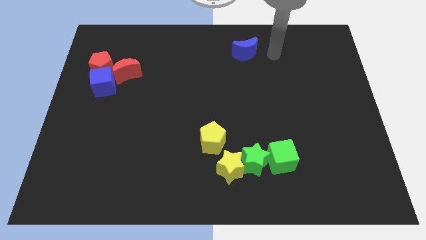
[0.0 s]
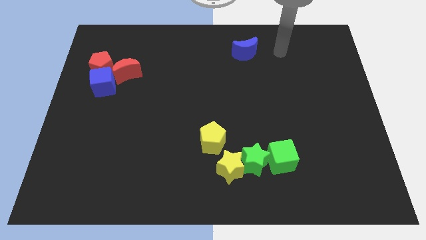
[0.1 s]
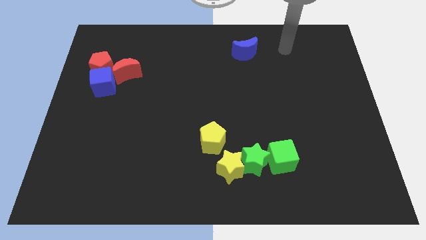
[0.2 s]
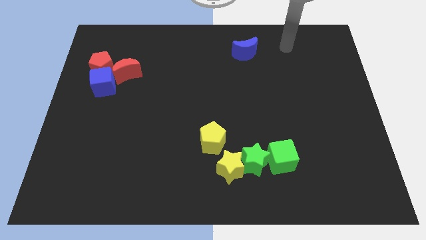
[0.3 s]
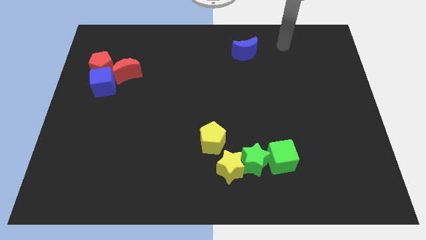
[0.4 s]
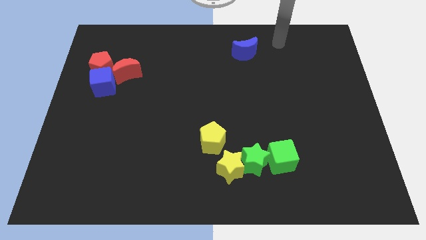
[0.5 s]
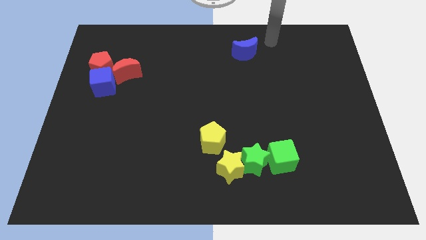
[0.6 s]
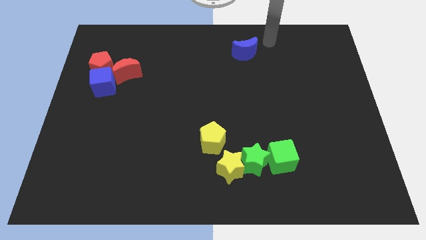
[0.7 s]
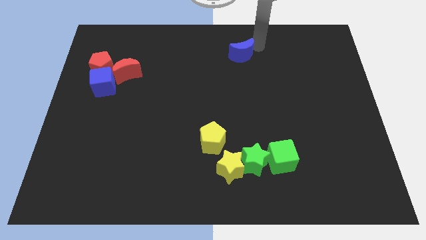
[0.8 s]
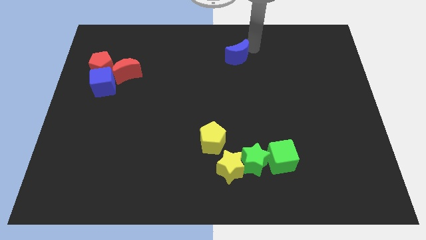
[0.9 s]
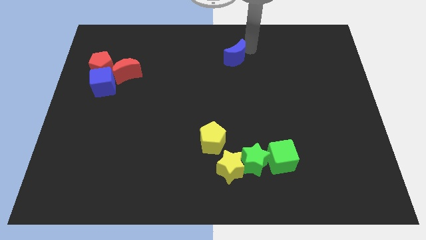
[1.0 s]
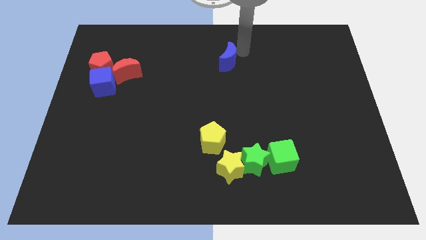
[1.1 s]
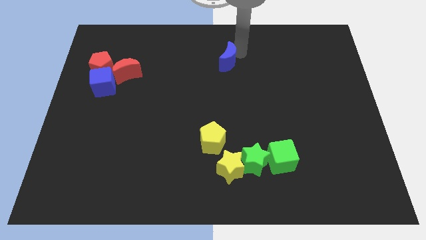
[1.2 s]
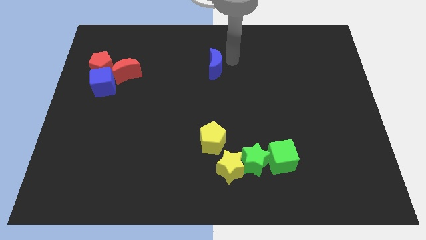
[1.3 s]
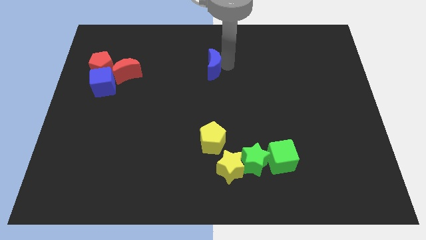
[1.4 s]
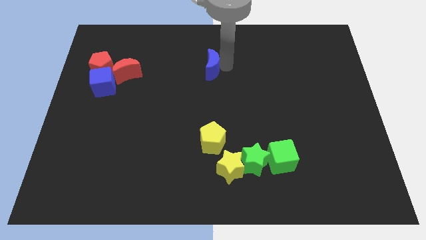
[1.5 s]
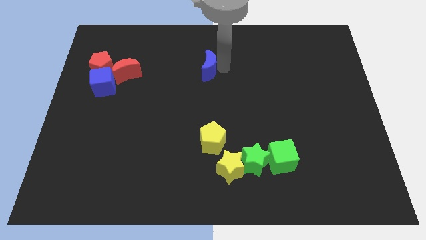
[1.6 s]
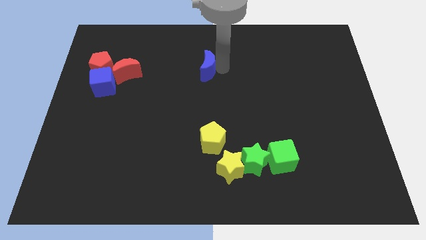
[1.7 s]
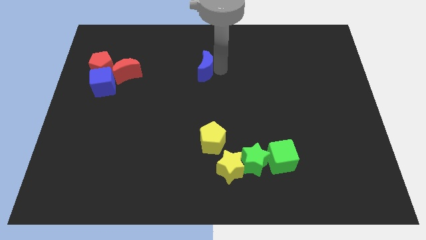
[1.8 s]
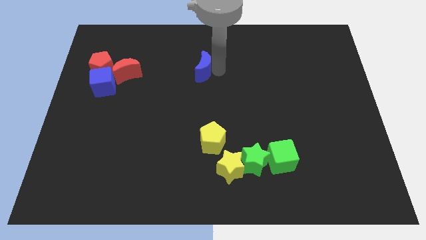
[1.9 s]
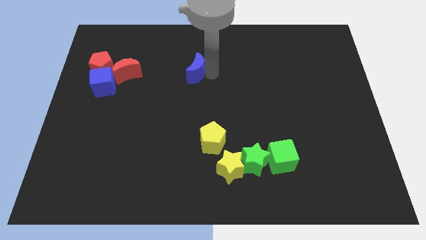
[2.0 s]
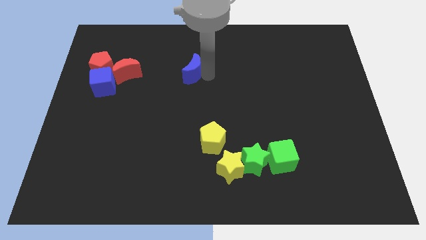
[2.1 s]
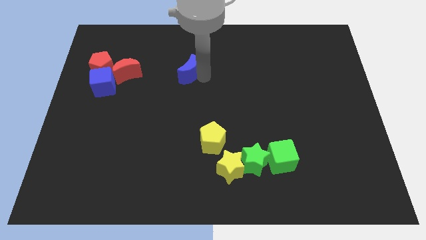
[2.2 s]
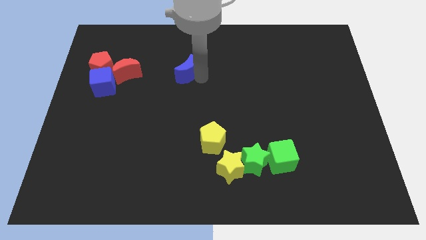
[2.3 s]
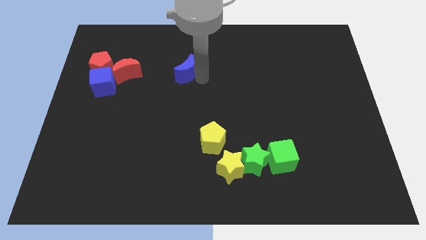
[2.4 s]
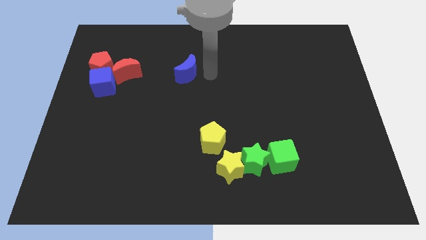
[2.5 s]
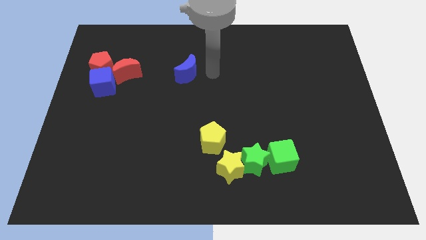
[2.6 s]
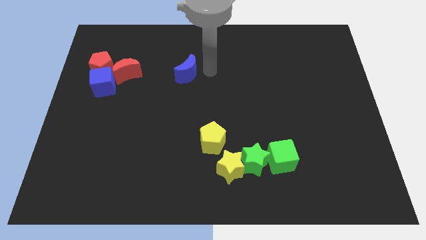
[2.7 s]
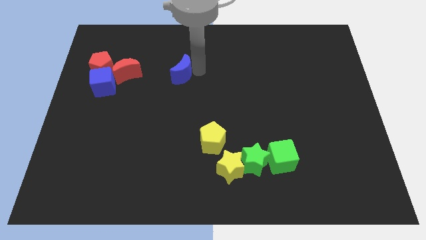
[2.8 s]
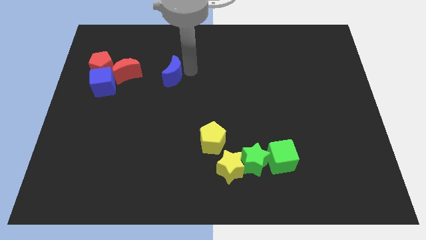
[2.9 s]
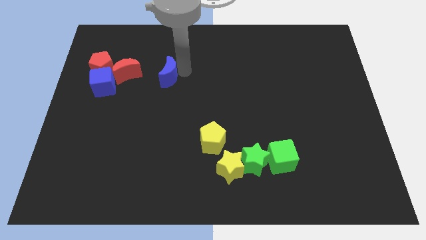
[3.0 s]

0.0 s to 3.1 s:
drag the blue crescent towards the group of blocks at the left side of the table

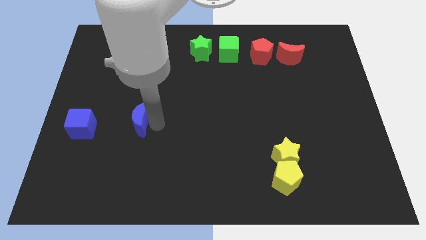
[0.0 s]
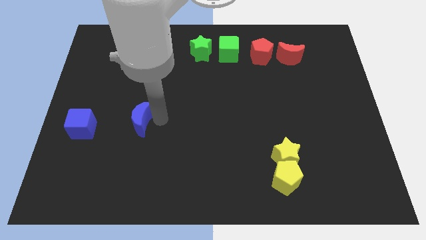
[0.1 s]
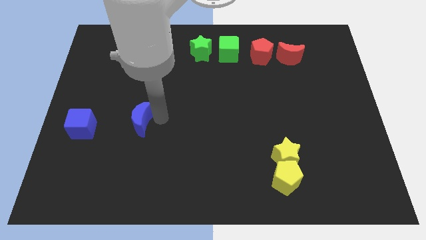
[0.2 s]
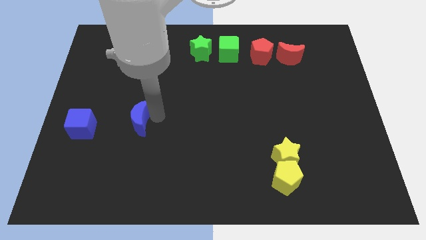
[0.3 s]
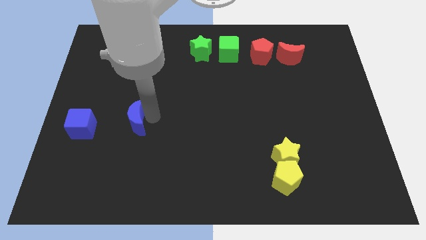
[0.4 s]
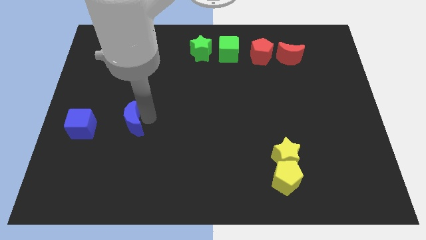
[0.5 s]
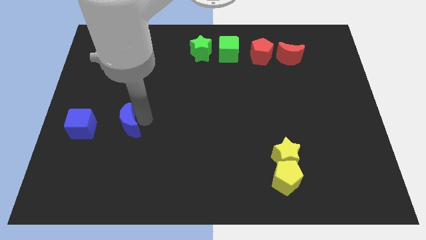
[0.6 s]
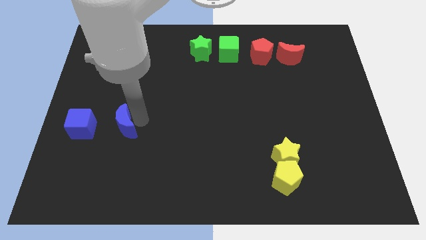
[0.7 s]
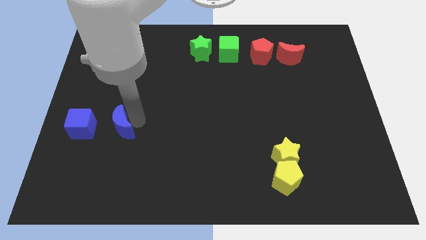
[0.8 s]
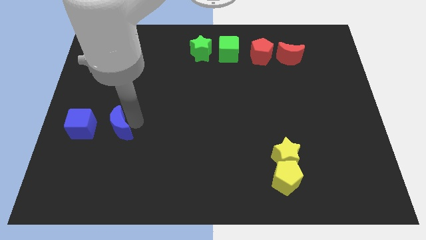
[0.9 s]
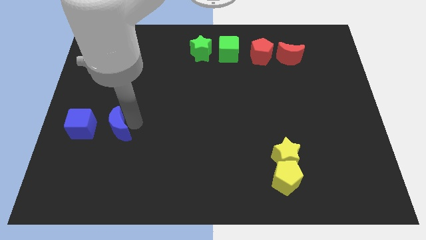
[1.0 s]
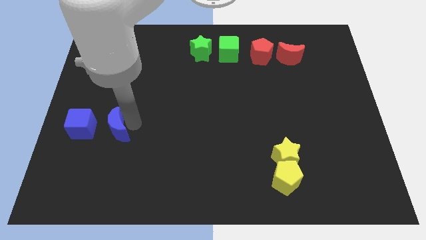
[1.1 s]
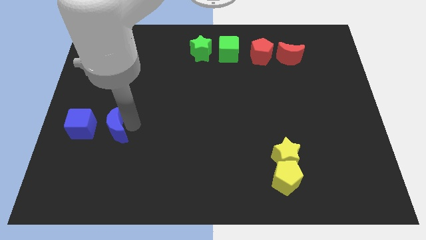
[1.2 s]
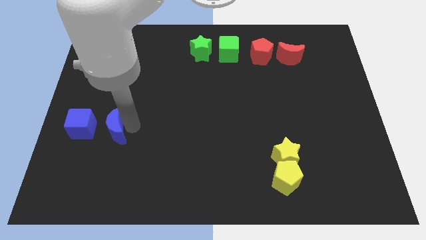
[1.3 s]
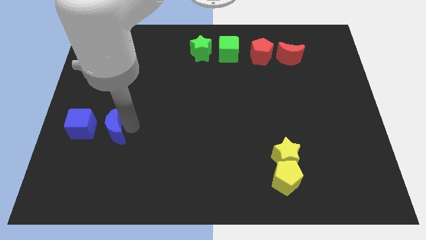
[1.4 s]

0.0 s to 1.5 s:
place the blue moon towards the blue cube

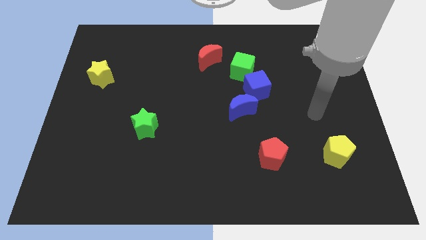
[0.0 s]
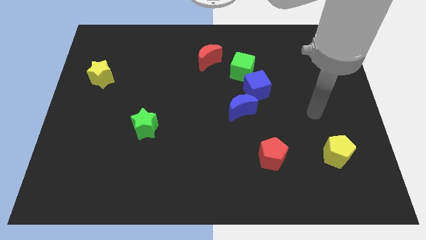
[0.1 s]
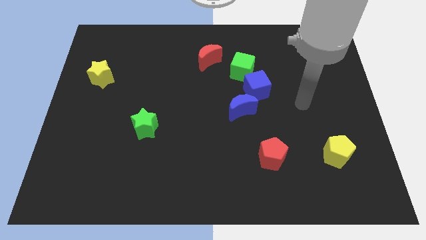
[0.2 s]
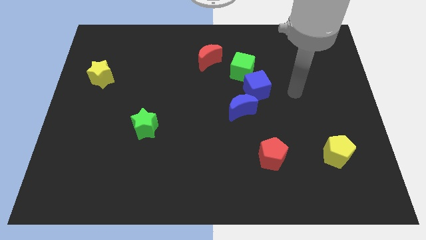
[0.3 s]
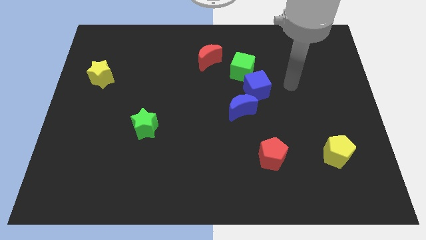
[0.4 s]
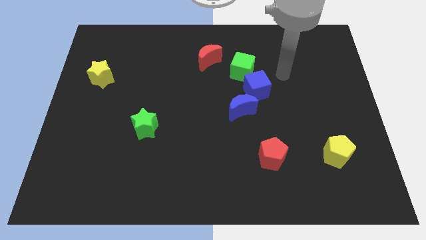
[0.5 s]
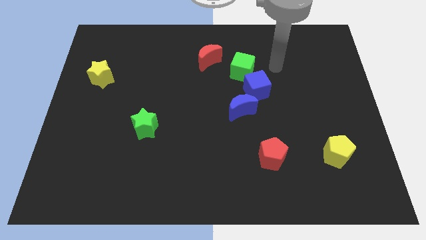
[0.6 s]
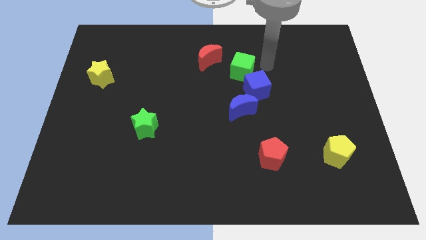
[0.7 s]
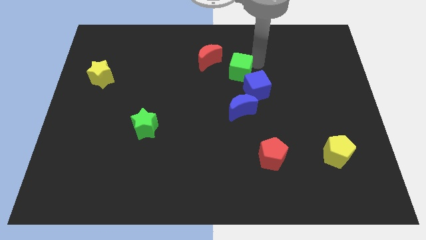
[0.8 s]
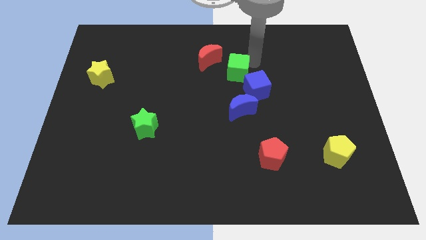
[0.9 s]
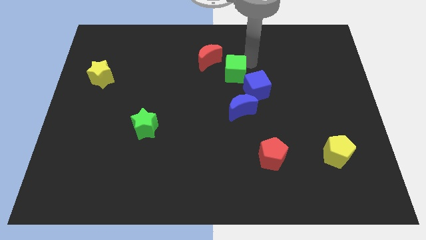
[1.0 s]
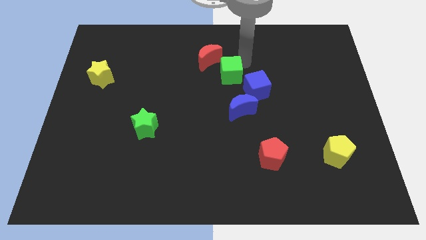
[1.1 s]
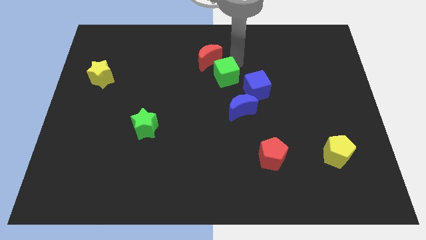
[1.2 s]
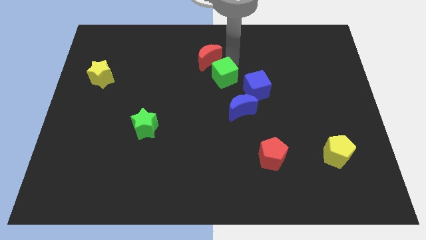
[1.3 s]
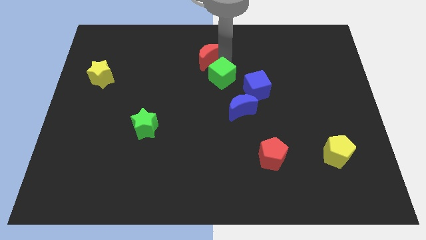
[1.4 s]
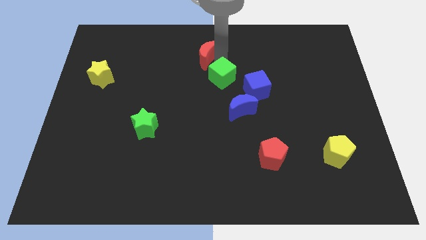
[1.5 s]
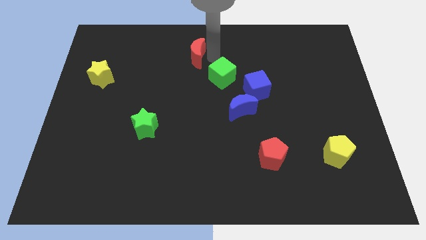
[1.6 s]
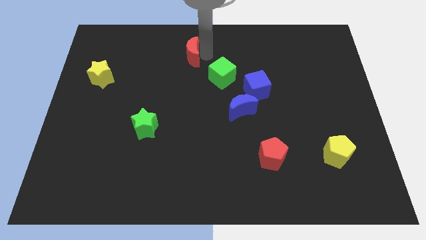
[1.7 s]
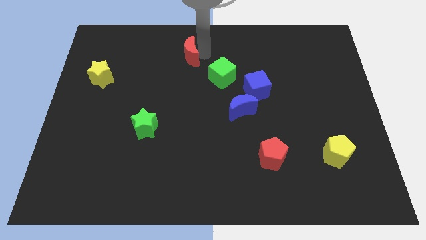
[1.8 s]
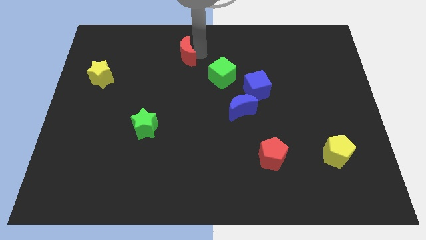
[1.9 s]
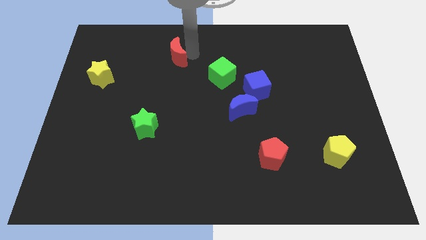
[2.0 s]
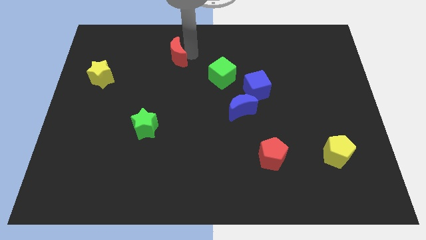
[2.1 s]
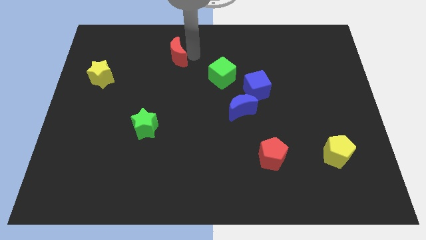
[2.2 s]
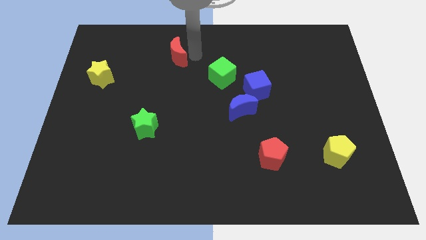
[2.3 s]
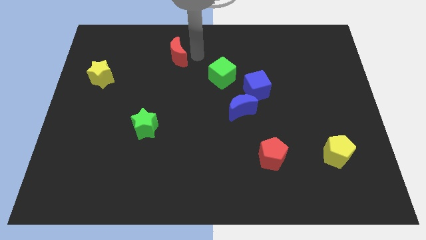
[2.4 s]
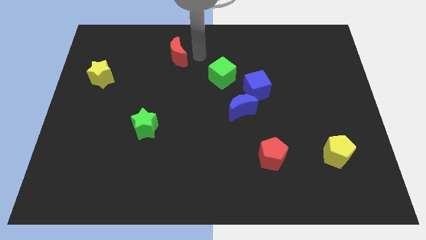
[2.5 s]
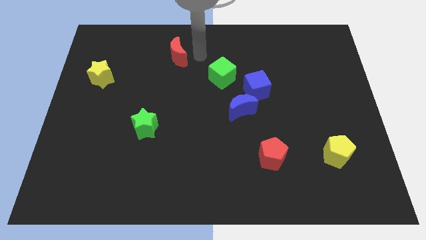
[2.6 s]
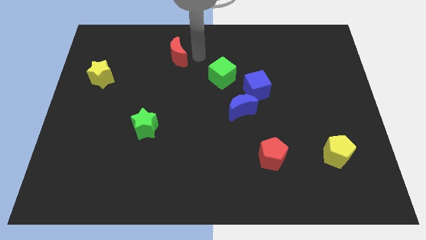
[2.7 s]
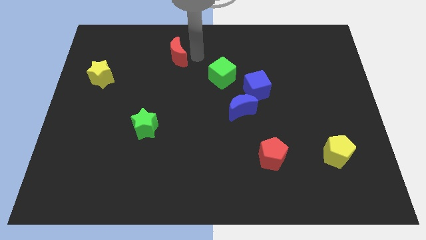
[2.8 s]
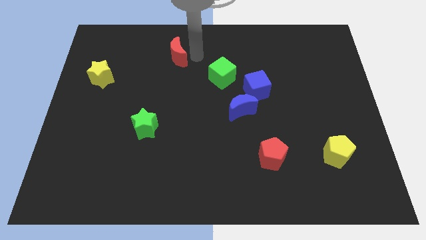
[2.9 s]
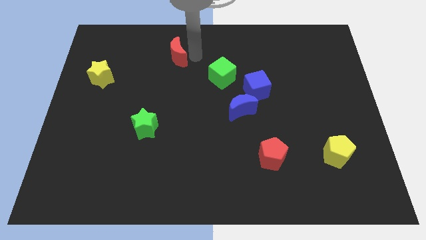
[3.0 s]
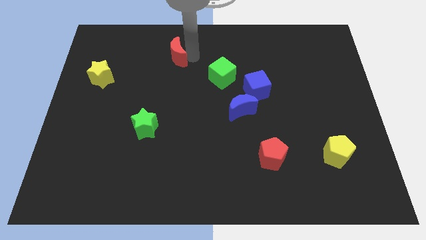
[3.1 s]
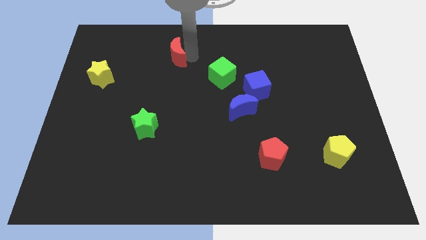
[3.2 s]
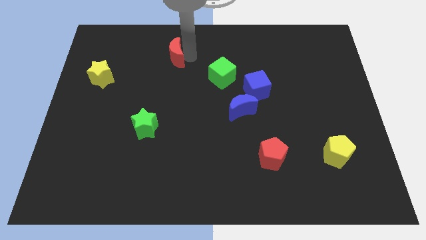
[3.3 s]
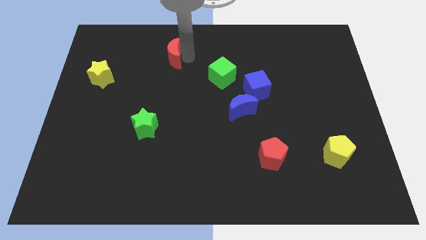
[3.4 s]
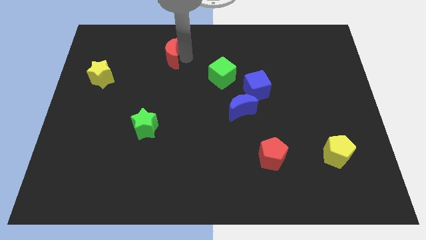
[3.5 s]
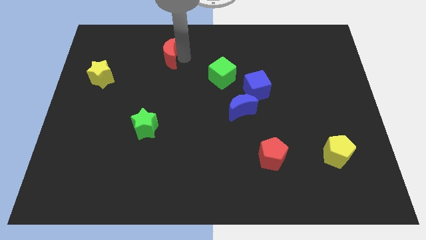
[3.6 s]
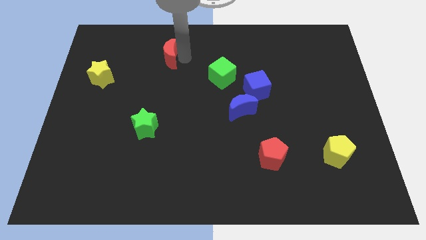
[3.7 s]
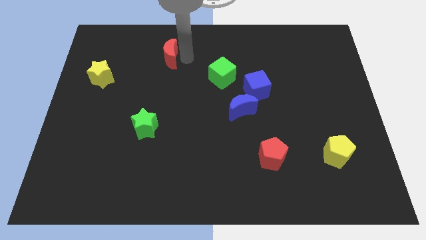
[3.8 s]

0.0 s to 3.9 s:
move red moon towards left

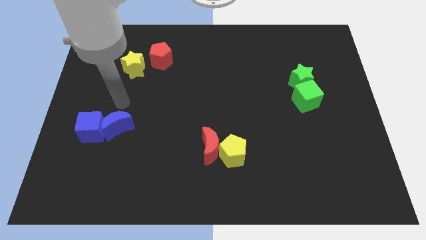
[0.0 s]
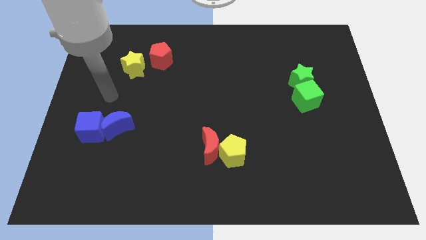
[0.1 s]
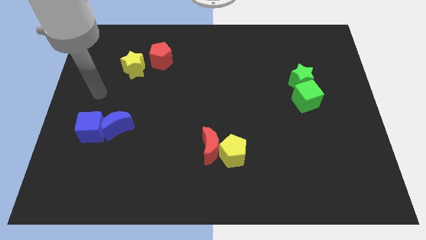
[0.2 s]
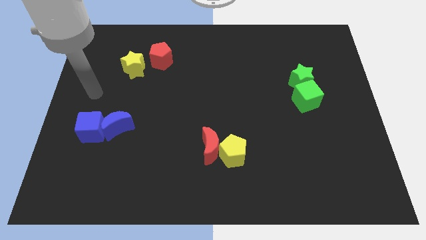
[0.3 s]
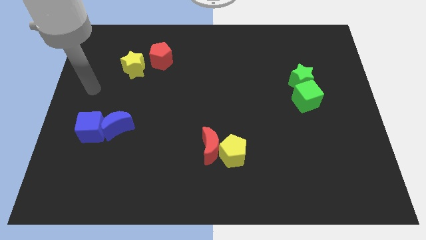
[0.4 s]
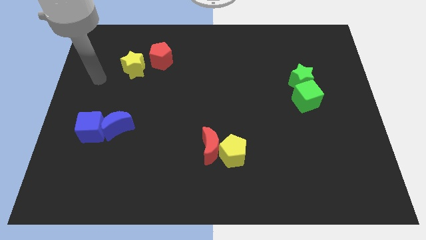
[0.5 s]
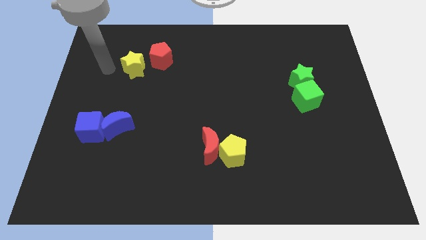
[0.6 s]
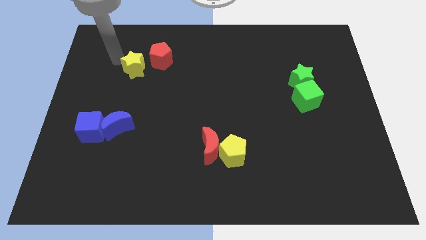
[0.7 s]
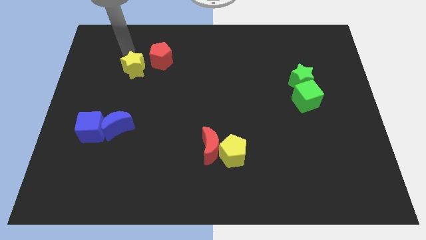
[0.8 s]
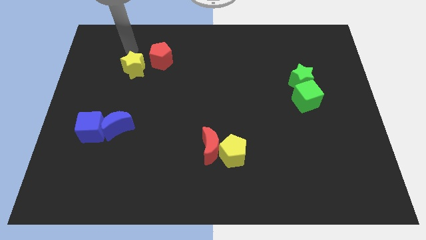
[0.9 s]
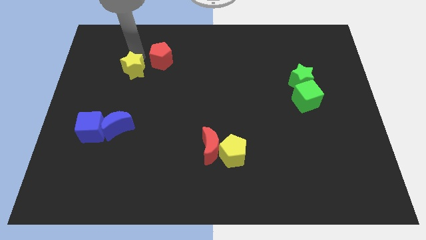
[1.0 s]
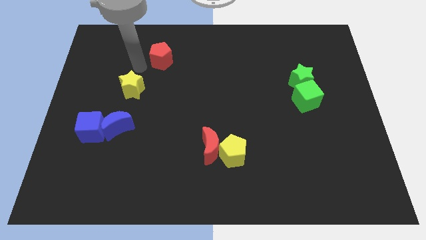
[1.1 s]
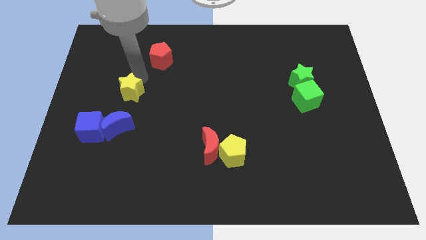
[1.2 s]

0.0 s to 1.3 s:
push the yellow star towards the blue moon
